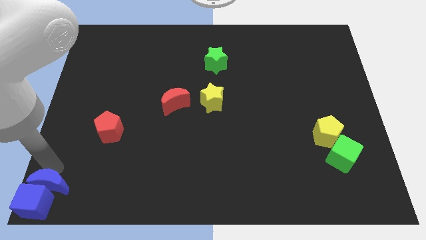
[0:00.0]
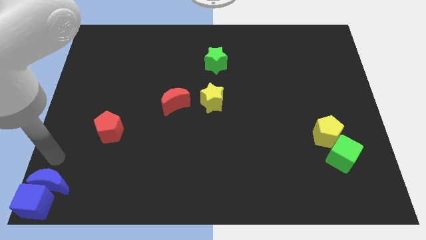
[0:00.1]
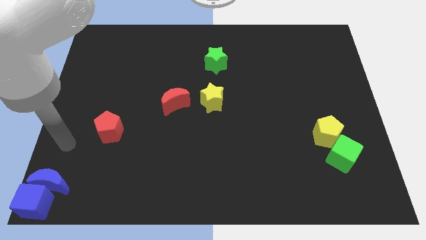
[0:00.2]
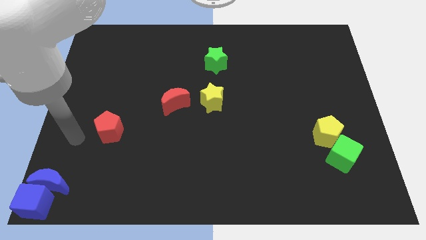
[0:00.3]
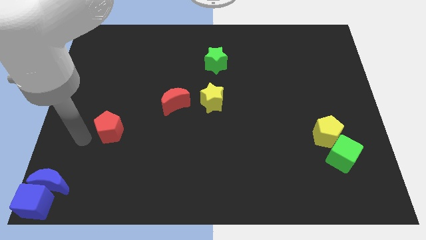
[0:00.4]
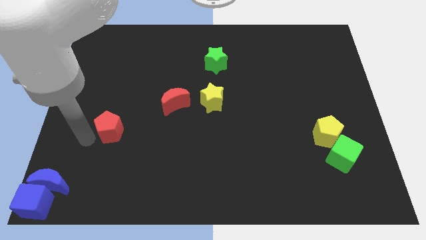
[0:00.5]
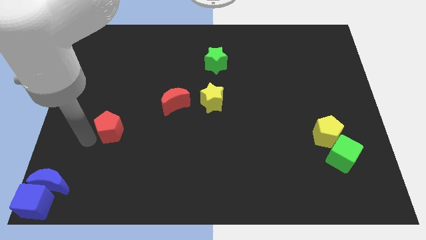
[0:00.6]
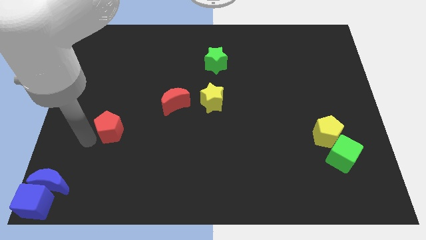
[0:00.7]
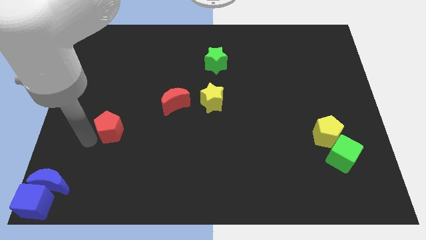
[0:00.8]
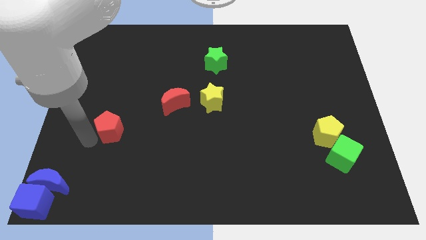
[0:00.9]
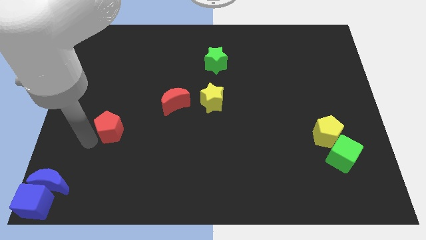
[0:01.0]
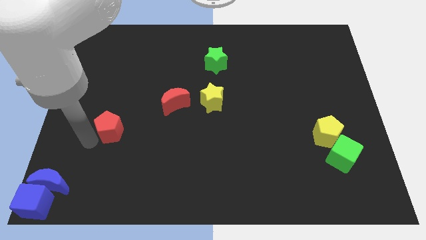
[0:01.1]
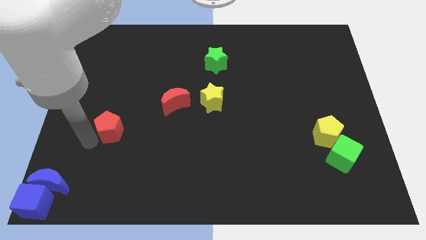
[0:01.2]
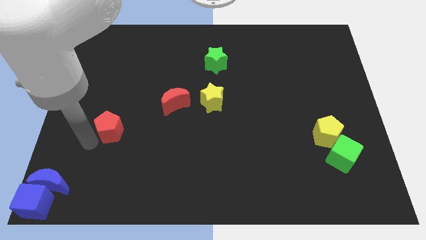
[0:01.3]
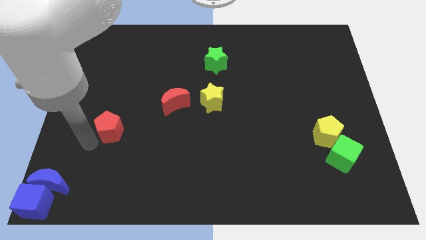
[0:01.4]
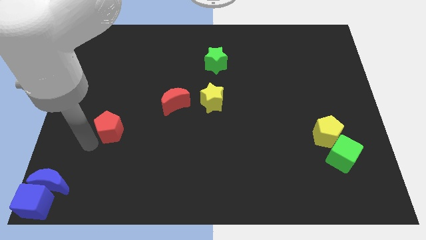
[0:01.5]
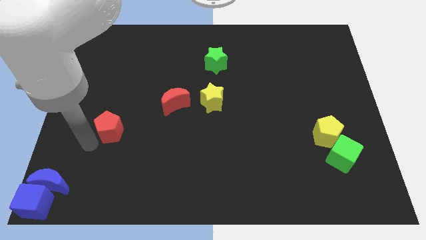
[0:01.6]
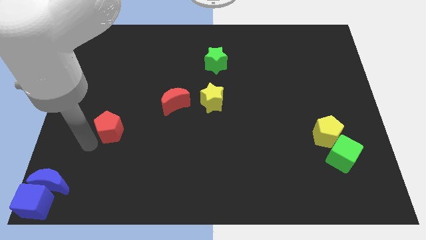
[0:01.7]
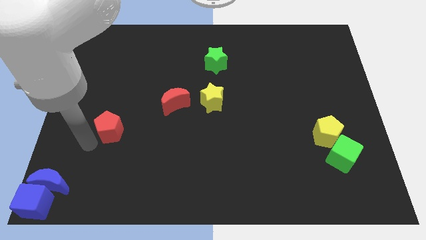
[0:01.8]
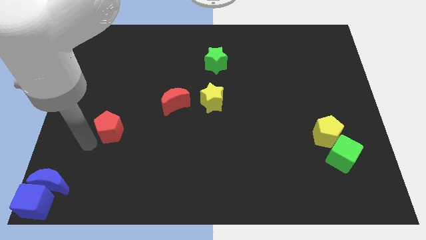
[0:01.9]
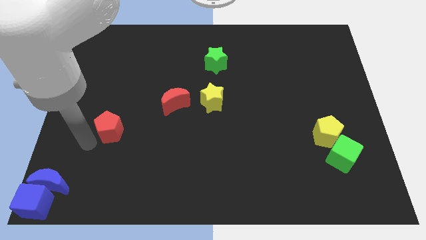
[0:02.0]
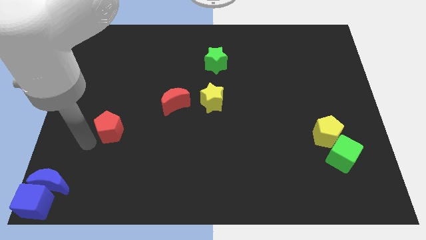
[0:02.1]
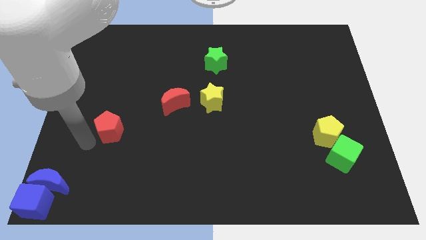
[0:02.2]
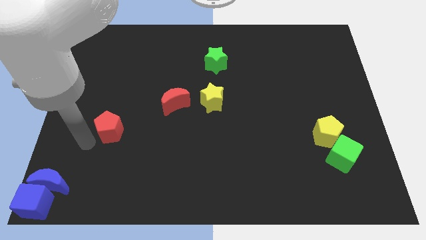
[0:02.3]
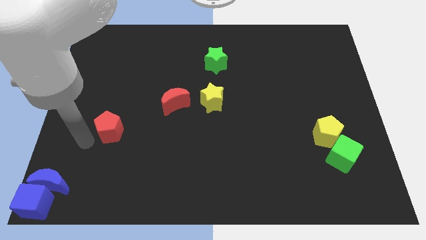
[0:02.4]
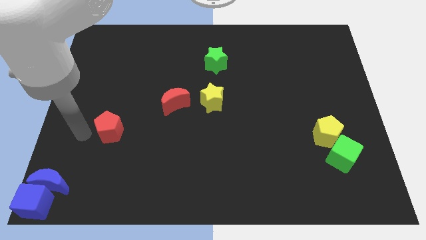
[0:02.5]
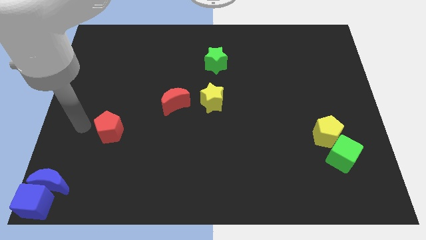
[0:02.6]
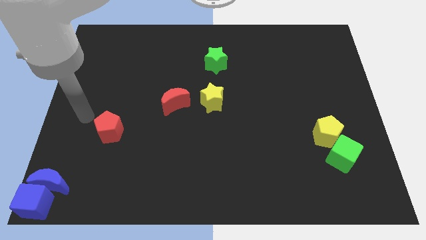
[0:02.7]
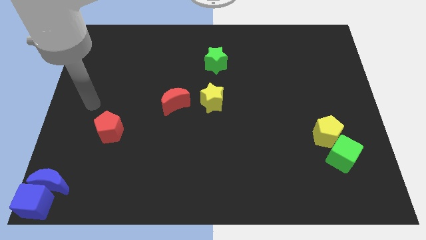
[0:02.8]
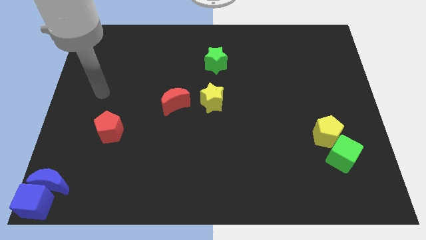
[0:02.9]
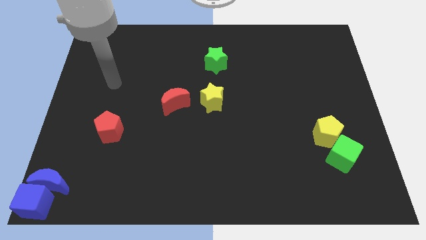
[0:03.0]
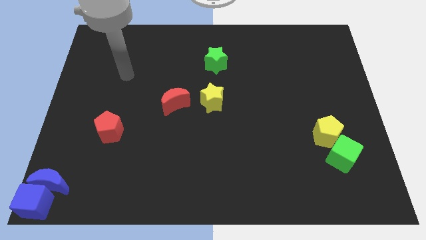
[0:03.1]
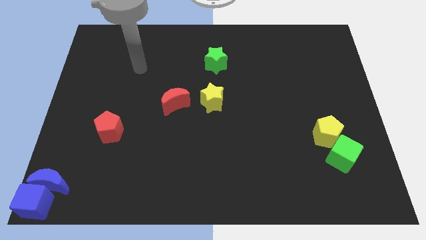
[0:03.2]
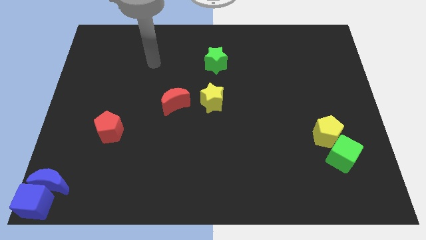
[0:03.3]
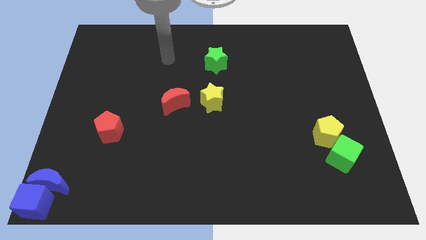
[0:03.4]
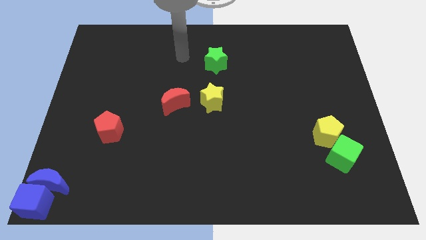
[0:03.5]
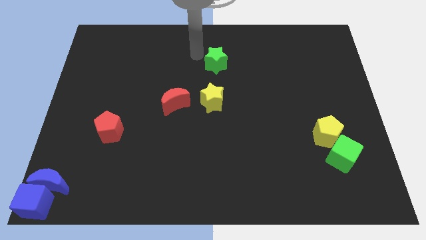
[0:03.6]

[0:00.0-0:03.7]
point your arm towards the top left side of the green star

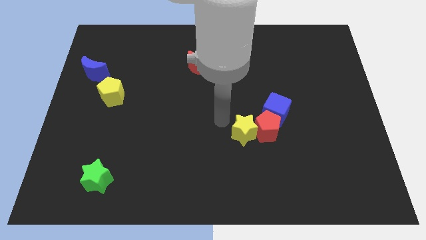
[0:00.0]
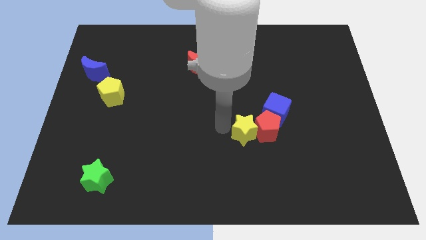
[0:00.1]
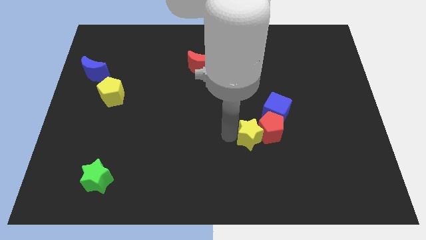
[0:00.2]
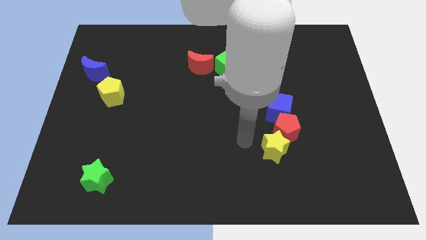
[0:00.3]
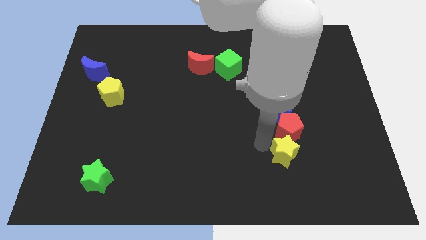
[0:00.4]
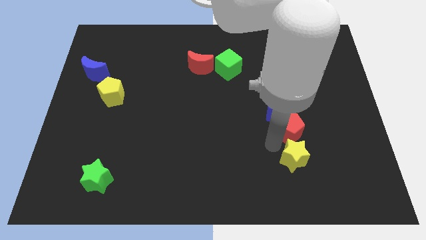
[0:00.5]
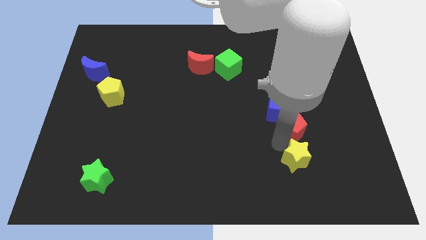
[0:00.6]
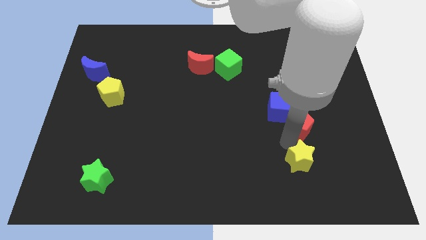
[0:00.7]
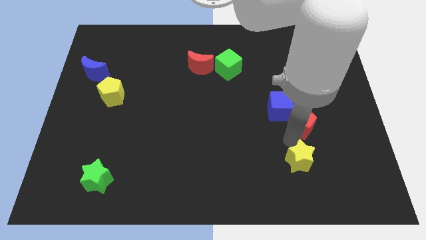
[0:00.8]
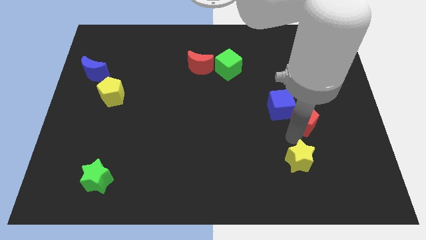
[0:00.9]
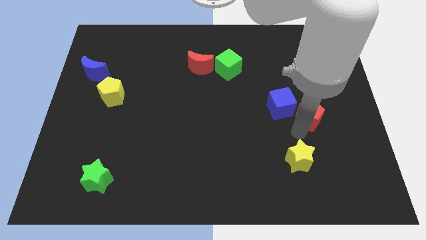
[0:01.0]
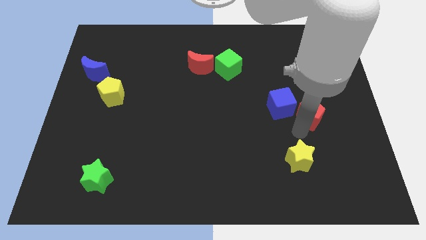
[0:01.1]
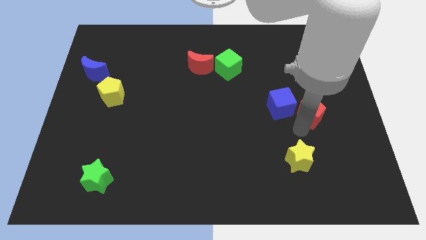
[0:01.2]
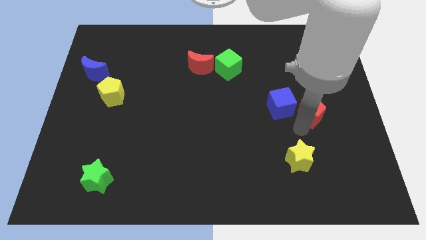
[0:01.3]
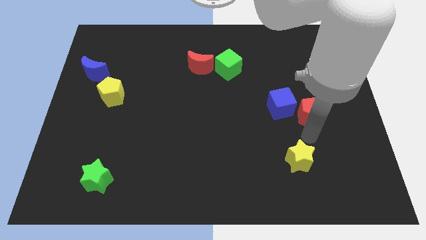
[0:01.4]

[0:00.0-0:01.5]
separate the red pentagon from the blue cube and the yellow star

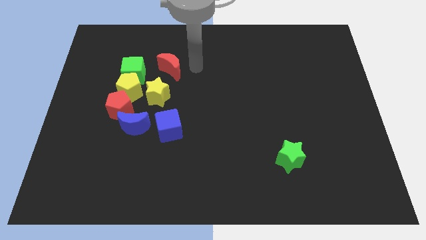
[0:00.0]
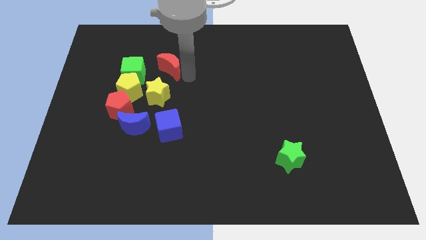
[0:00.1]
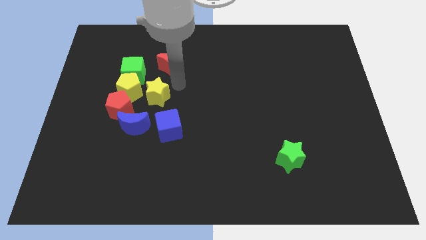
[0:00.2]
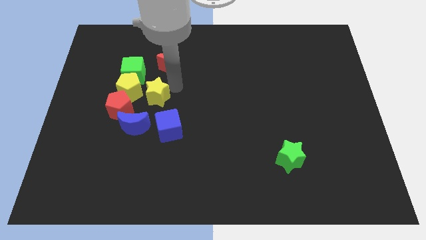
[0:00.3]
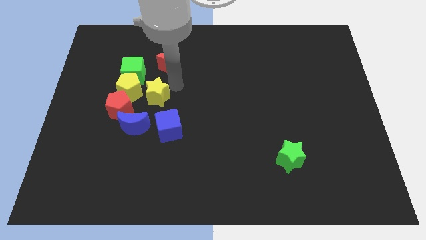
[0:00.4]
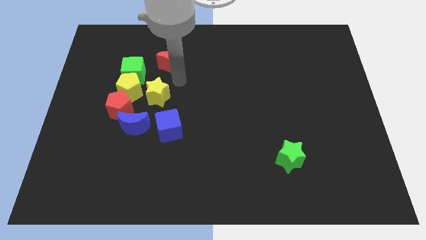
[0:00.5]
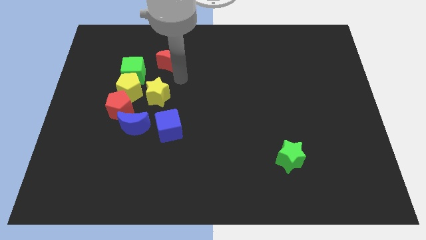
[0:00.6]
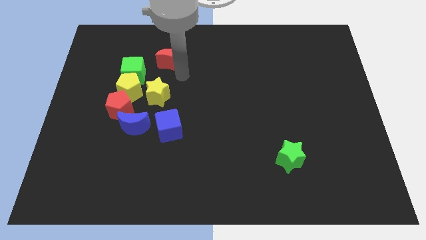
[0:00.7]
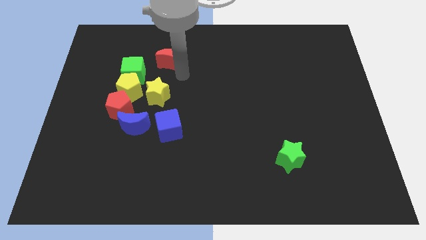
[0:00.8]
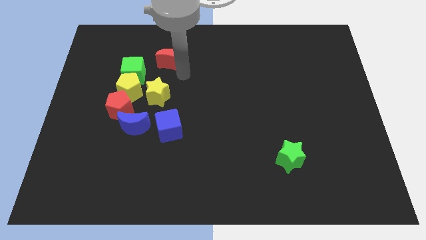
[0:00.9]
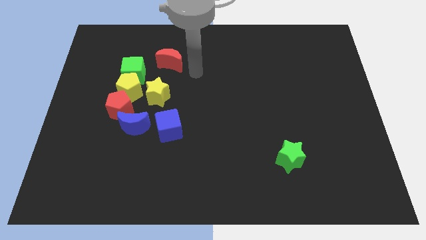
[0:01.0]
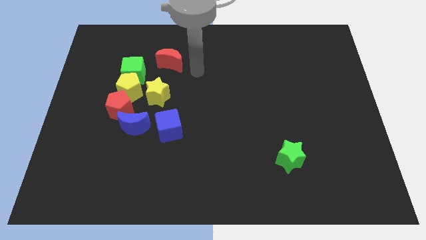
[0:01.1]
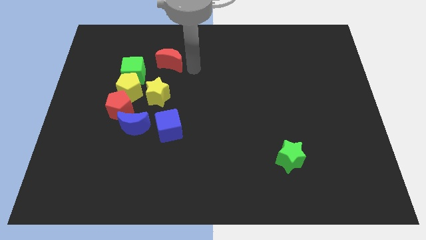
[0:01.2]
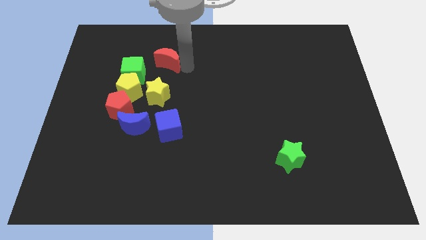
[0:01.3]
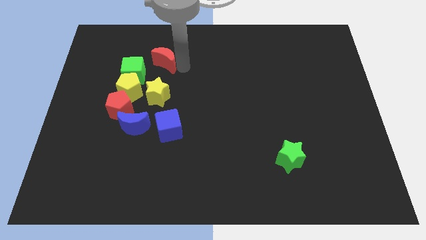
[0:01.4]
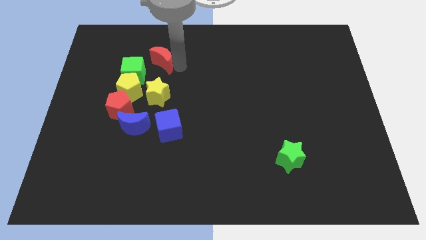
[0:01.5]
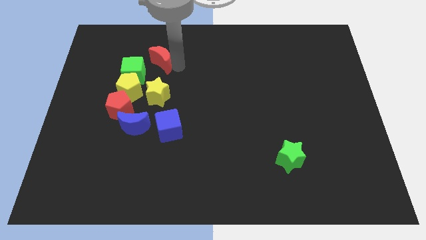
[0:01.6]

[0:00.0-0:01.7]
place the red crescent above the yellow star

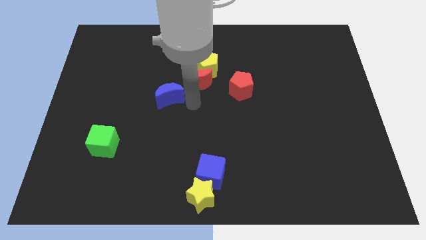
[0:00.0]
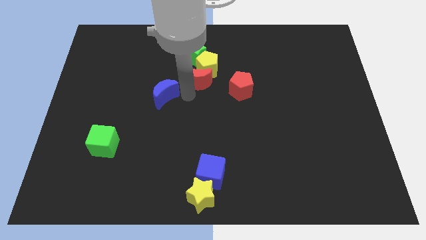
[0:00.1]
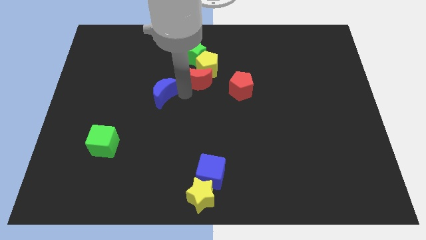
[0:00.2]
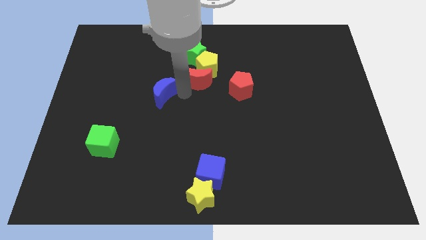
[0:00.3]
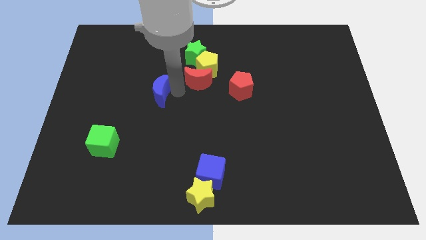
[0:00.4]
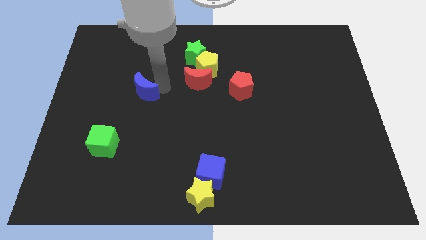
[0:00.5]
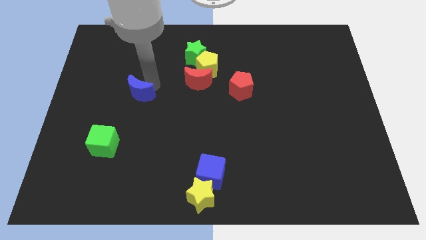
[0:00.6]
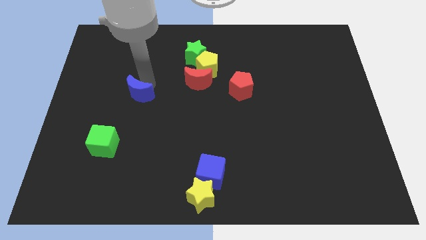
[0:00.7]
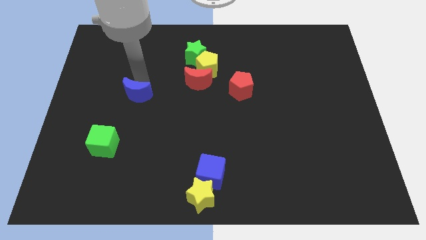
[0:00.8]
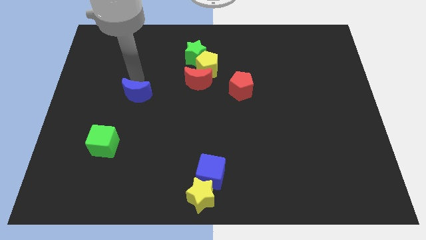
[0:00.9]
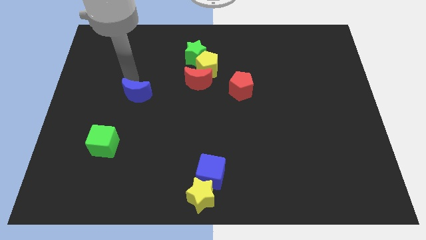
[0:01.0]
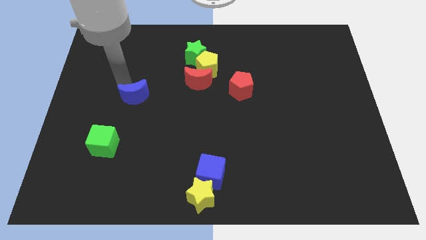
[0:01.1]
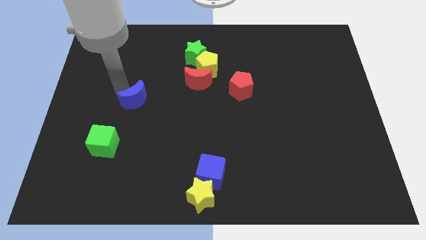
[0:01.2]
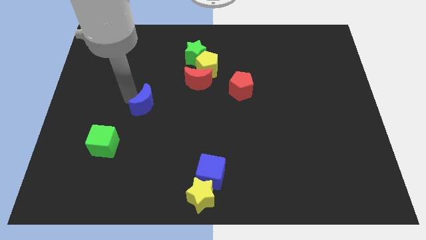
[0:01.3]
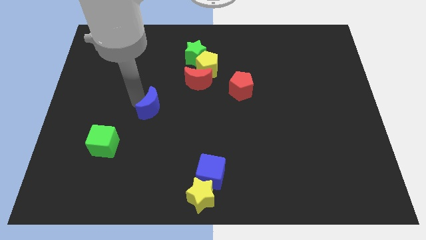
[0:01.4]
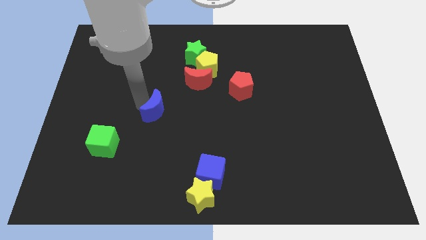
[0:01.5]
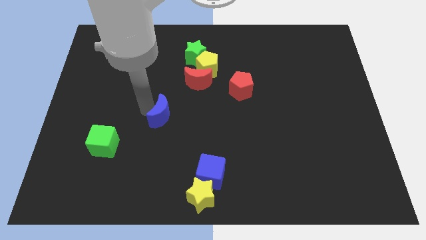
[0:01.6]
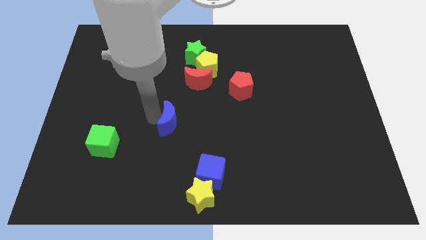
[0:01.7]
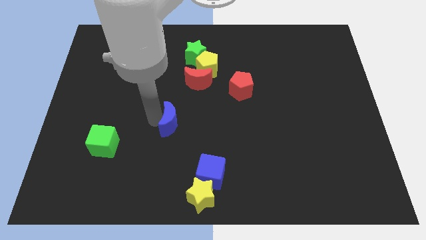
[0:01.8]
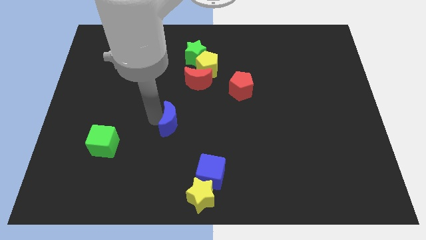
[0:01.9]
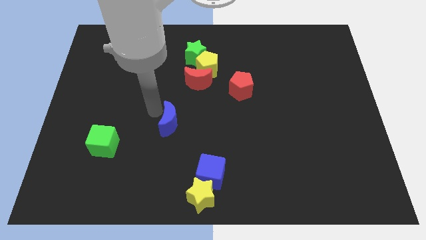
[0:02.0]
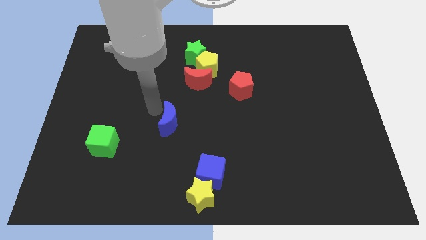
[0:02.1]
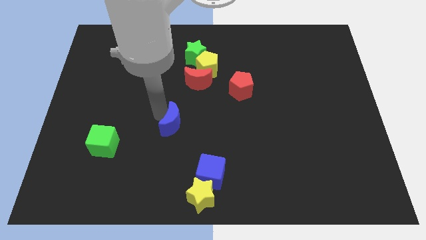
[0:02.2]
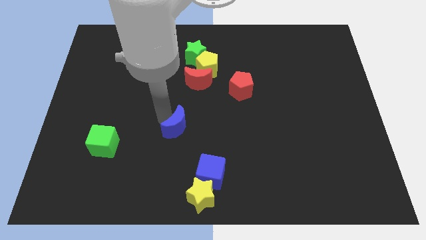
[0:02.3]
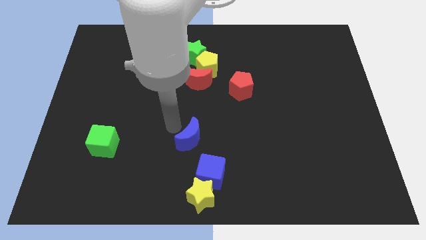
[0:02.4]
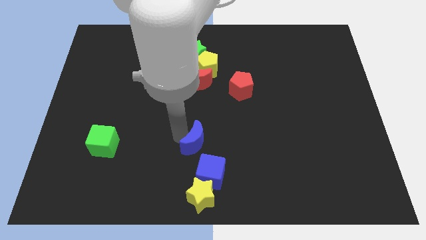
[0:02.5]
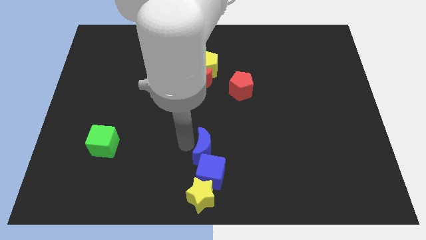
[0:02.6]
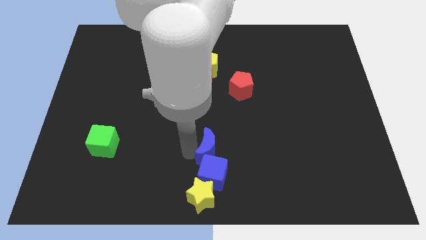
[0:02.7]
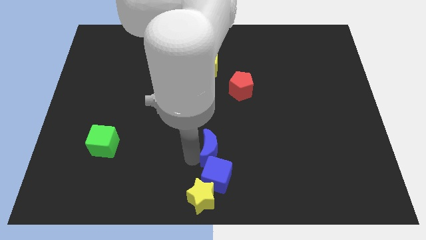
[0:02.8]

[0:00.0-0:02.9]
push the blue crescent to the top of the blue cube
